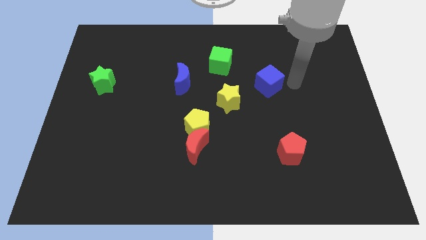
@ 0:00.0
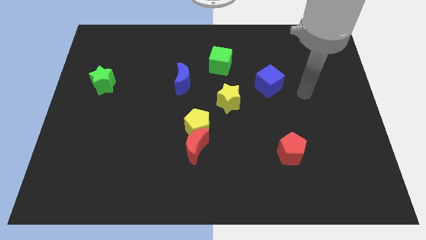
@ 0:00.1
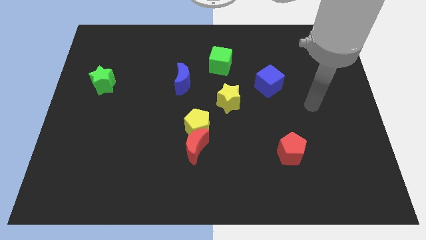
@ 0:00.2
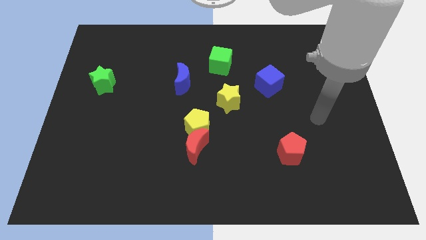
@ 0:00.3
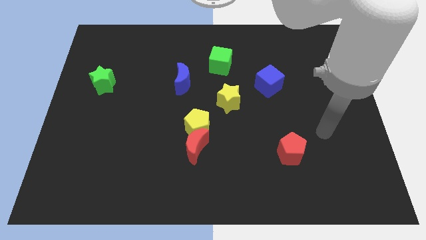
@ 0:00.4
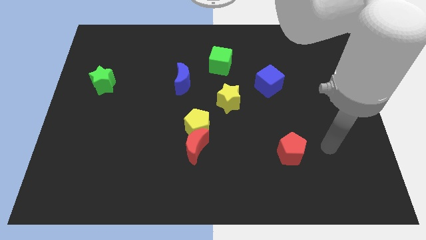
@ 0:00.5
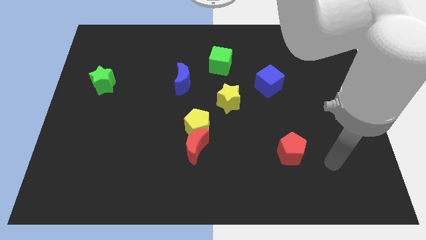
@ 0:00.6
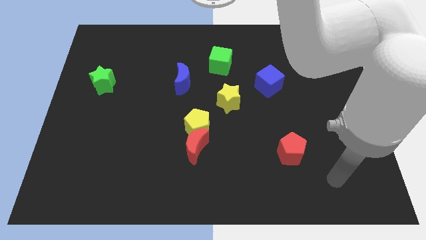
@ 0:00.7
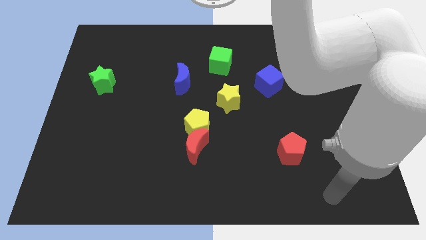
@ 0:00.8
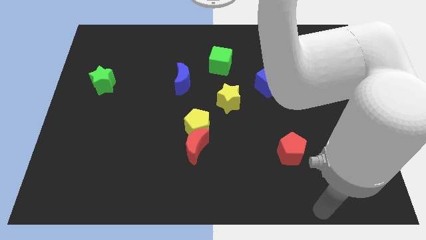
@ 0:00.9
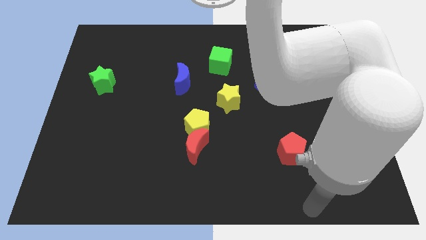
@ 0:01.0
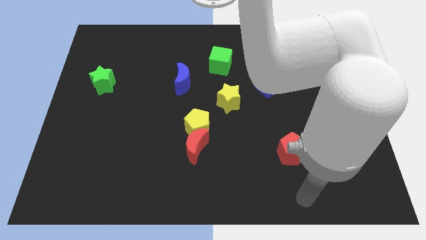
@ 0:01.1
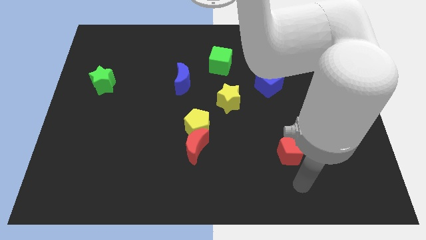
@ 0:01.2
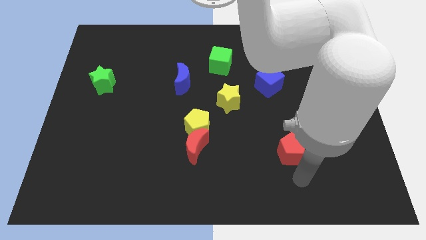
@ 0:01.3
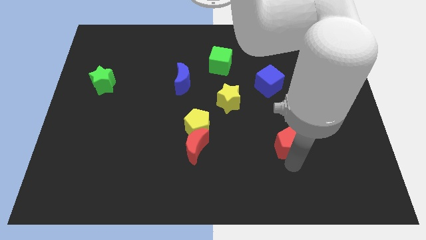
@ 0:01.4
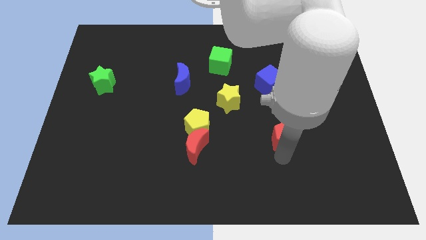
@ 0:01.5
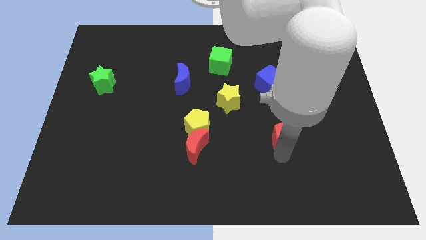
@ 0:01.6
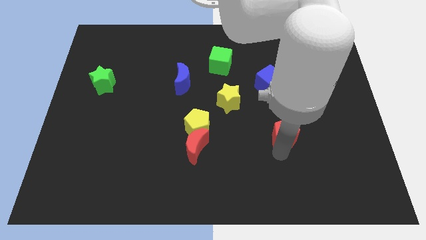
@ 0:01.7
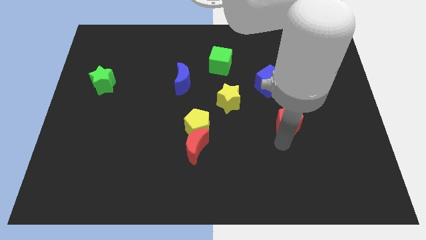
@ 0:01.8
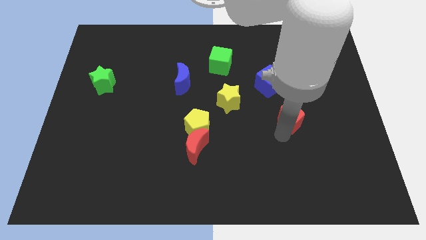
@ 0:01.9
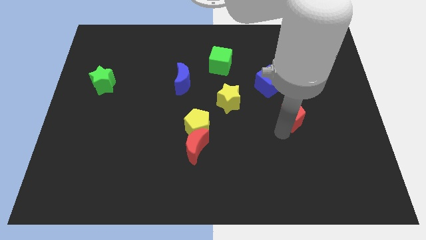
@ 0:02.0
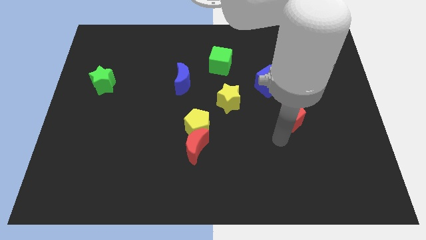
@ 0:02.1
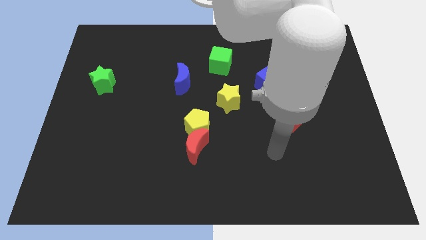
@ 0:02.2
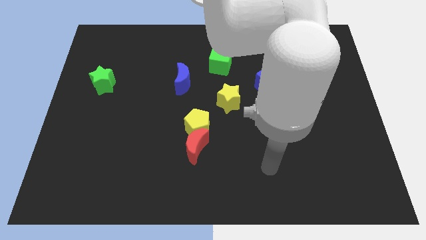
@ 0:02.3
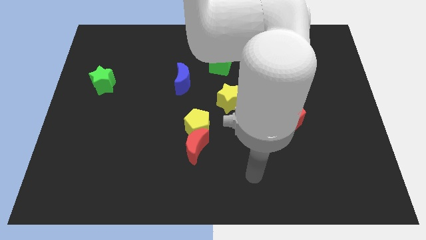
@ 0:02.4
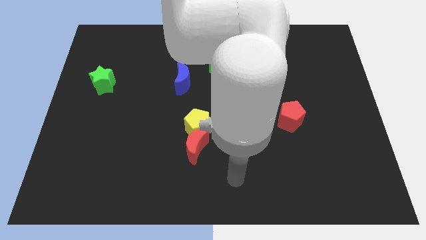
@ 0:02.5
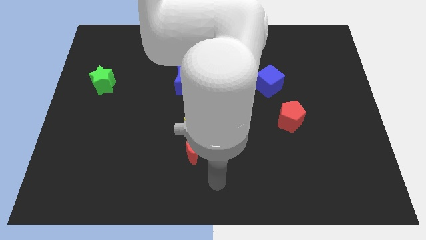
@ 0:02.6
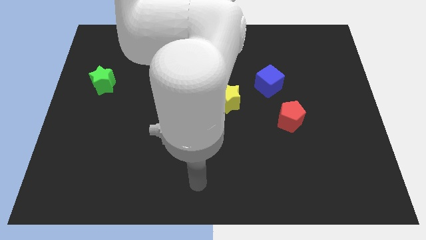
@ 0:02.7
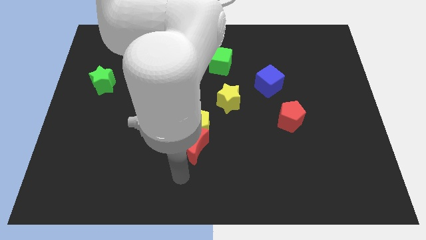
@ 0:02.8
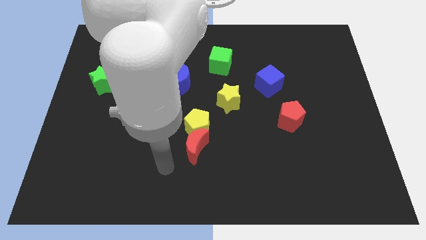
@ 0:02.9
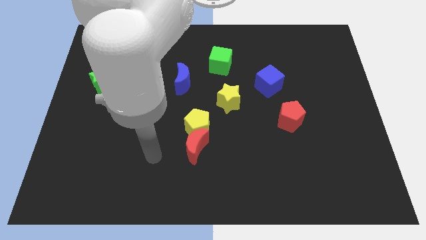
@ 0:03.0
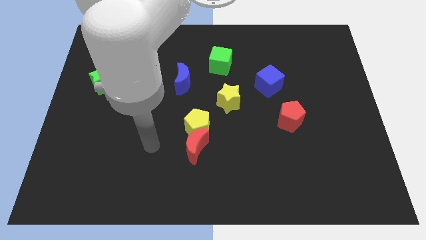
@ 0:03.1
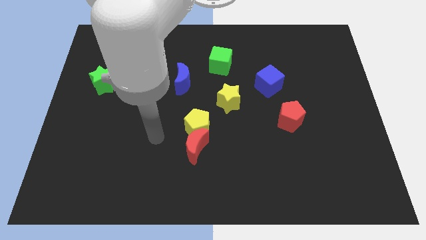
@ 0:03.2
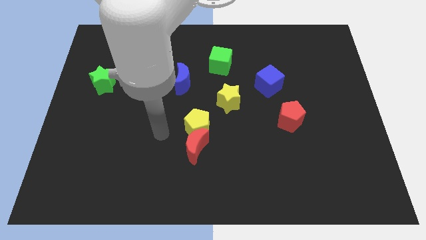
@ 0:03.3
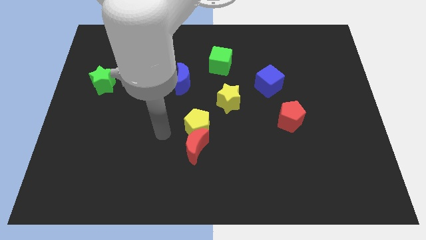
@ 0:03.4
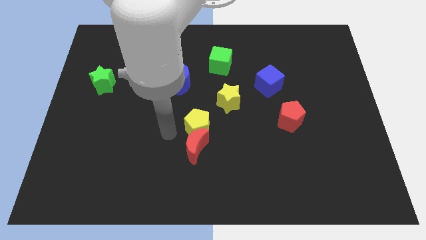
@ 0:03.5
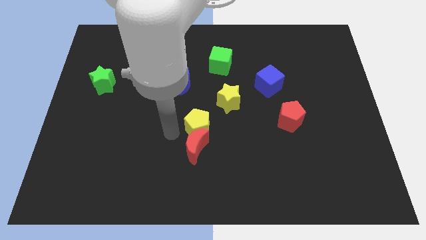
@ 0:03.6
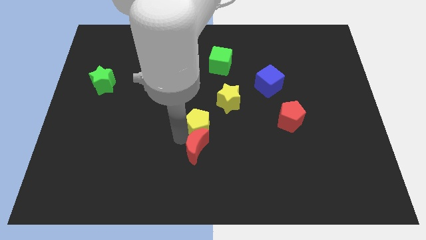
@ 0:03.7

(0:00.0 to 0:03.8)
move the red penatgon slightly up

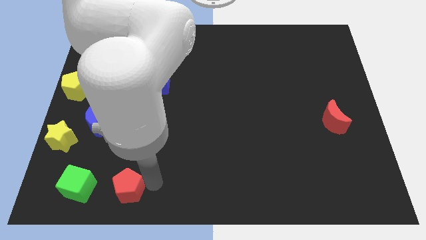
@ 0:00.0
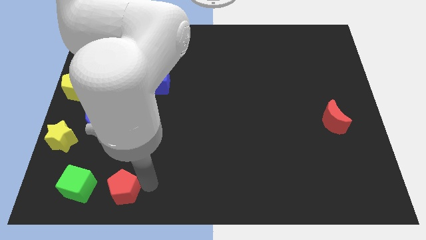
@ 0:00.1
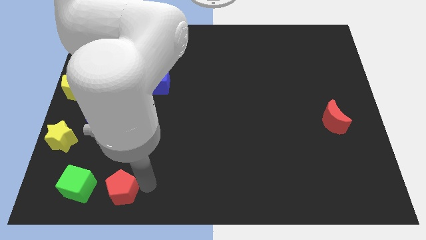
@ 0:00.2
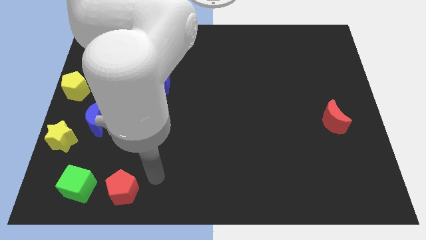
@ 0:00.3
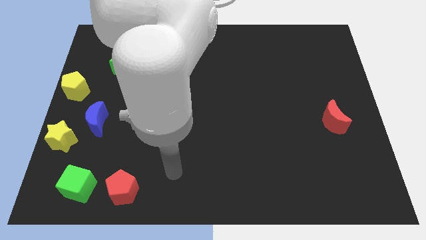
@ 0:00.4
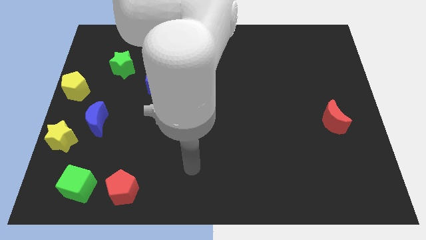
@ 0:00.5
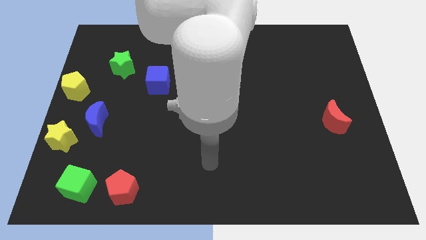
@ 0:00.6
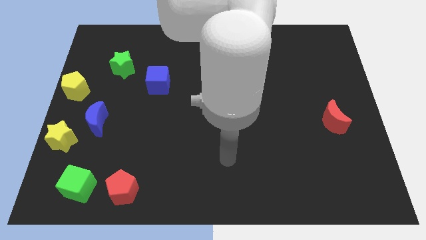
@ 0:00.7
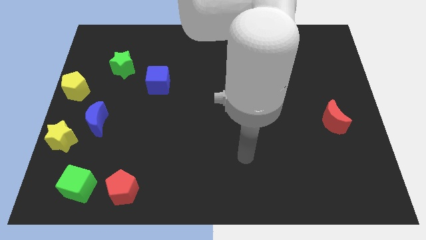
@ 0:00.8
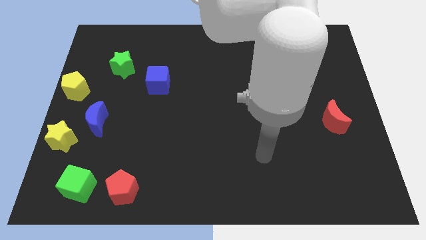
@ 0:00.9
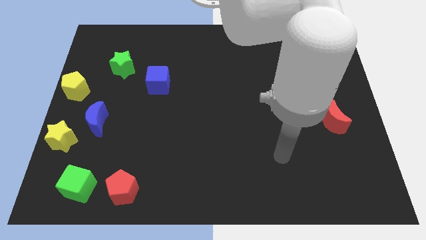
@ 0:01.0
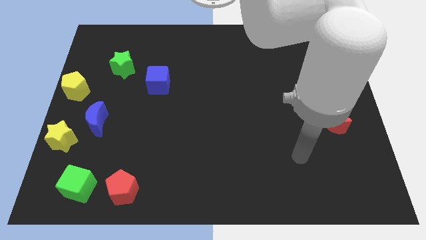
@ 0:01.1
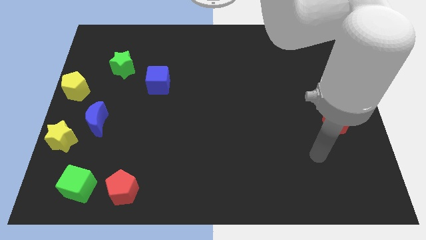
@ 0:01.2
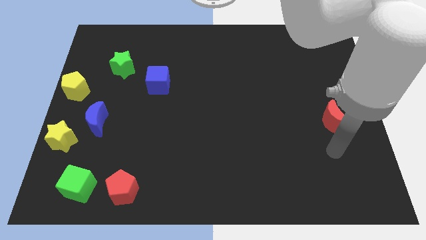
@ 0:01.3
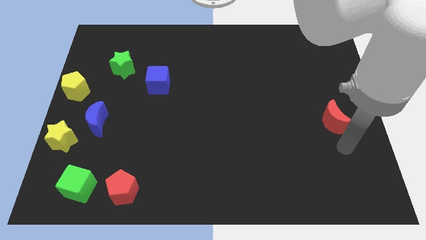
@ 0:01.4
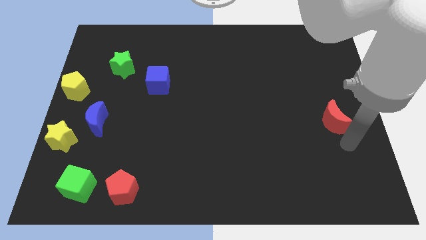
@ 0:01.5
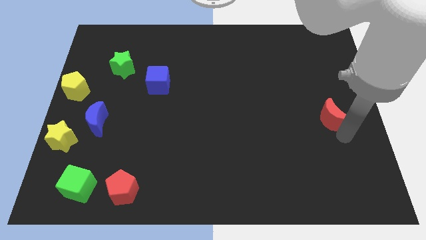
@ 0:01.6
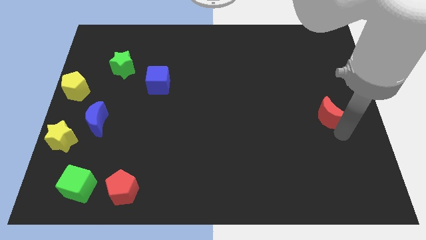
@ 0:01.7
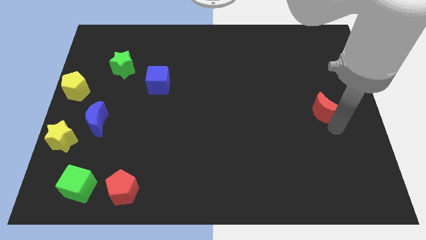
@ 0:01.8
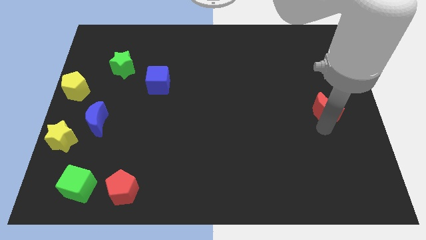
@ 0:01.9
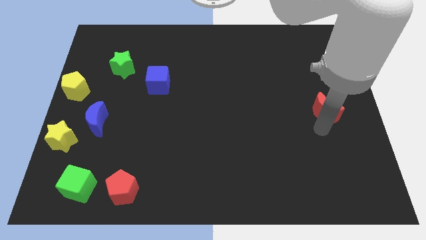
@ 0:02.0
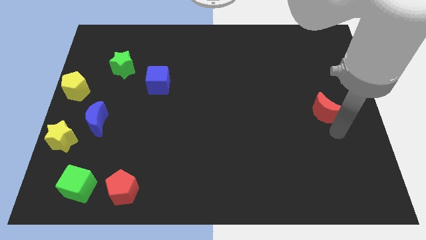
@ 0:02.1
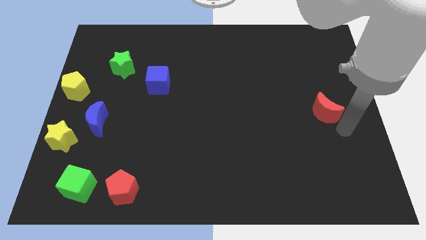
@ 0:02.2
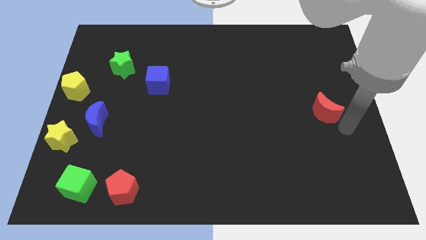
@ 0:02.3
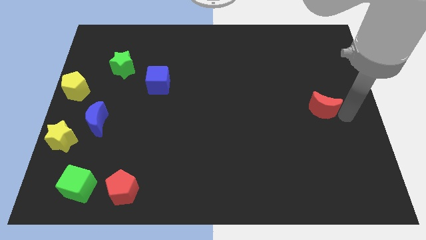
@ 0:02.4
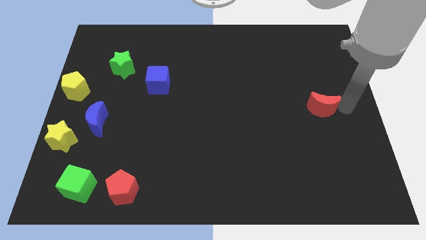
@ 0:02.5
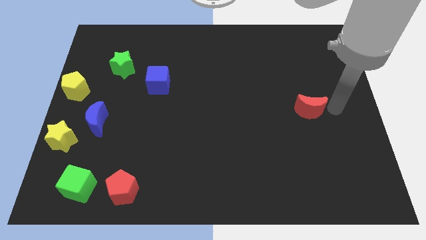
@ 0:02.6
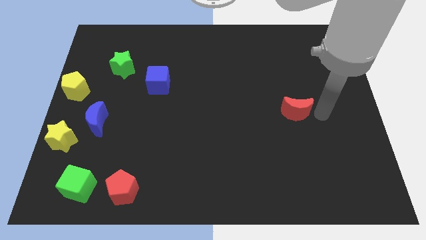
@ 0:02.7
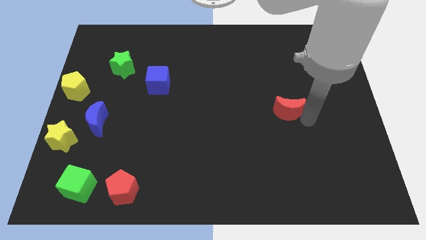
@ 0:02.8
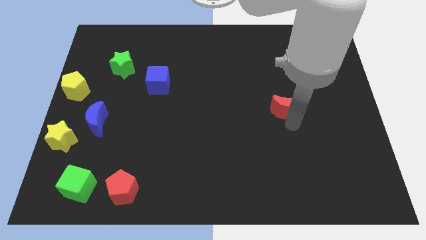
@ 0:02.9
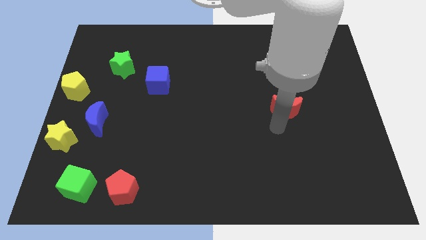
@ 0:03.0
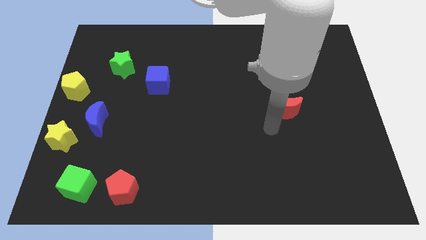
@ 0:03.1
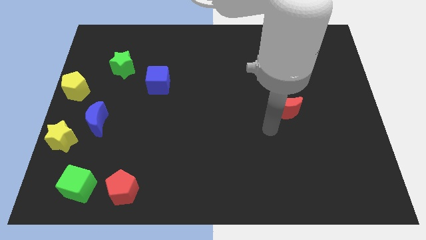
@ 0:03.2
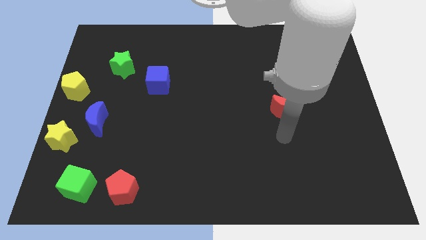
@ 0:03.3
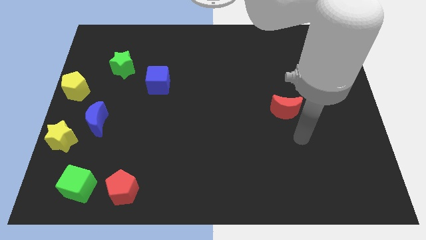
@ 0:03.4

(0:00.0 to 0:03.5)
slide the red moon towards the center side of the board

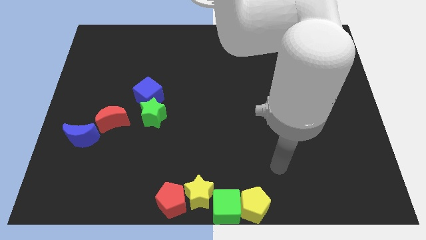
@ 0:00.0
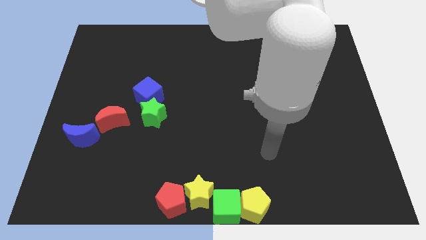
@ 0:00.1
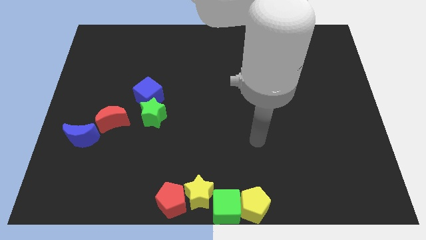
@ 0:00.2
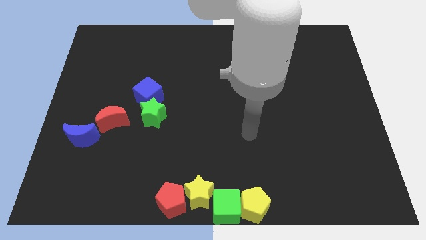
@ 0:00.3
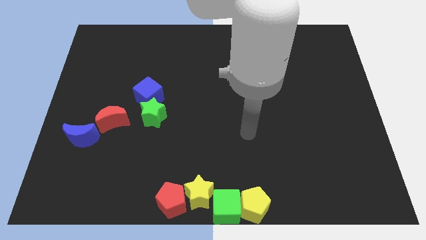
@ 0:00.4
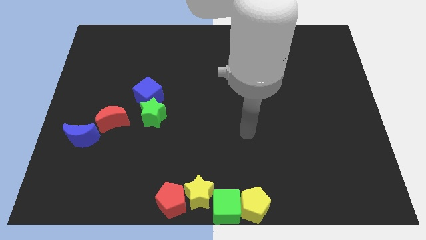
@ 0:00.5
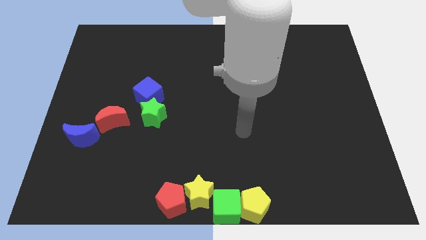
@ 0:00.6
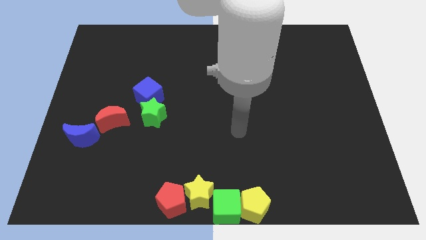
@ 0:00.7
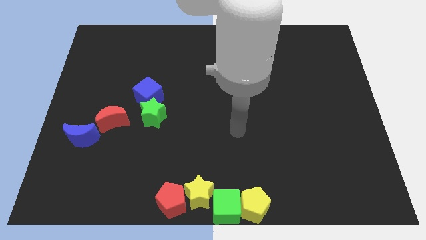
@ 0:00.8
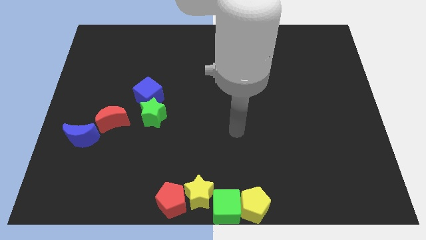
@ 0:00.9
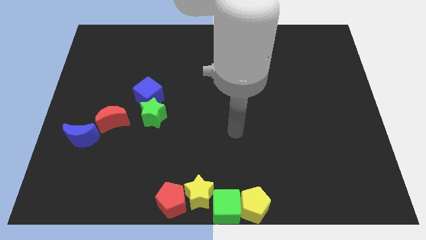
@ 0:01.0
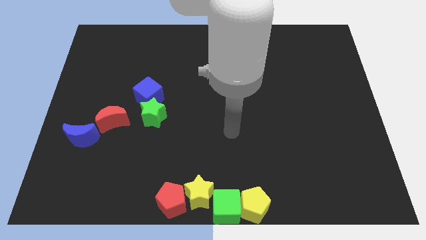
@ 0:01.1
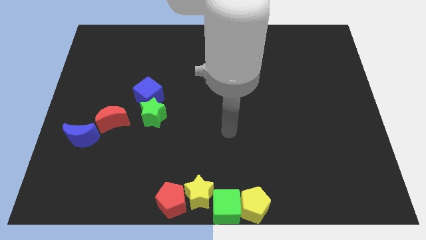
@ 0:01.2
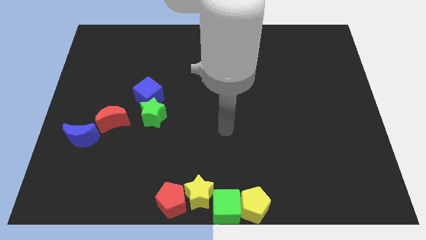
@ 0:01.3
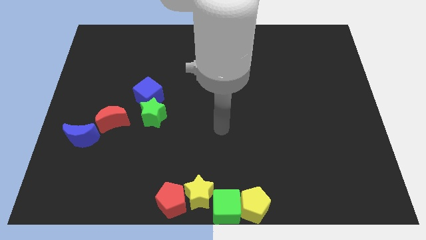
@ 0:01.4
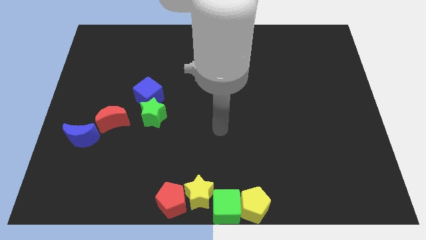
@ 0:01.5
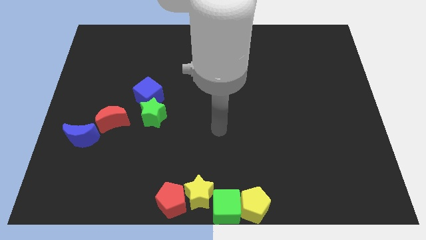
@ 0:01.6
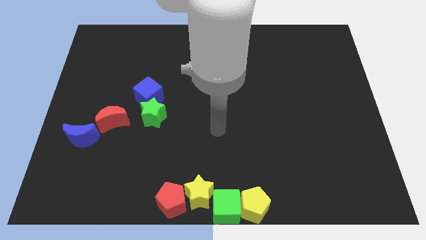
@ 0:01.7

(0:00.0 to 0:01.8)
place the arm at the center of the board
